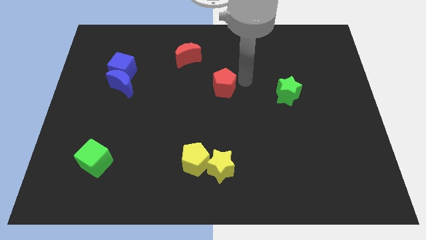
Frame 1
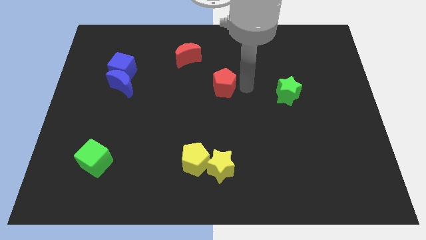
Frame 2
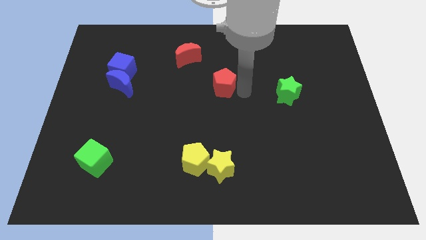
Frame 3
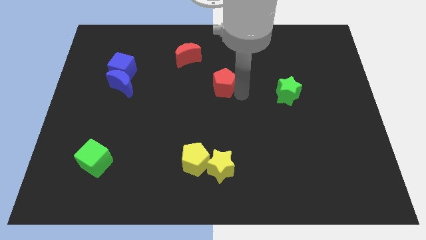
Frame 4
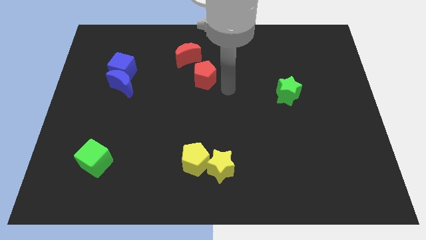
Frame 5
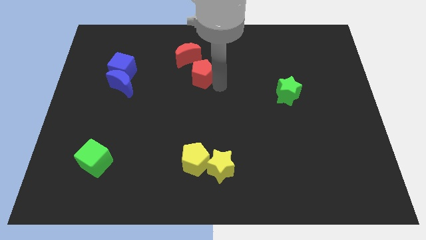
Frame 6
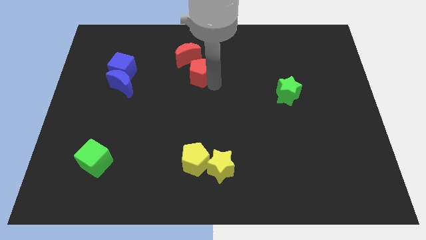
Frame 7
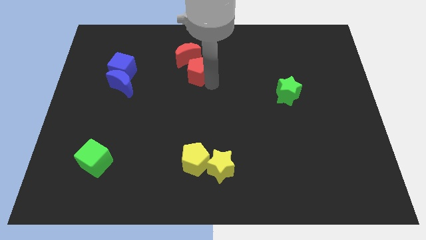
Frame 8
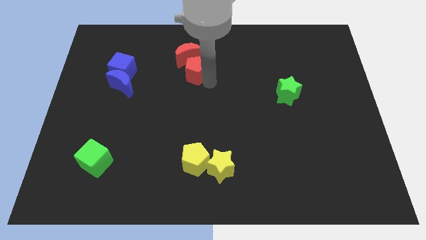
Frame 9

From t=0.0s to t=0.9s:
put the red pentagon into the red crescent

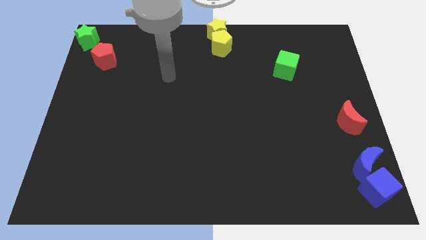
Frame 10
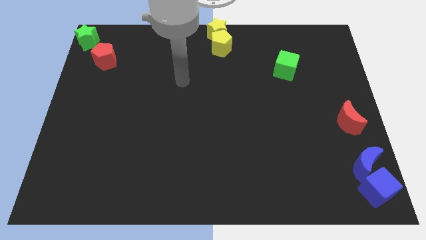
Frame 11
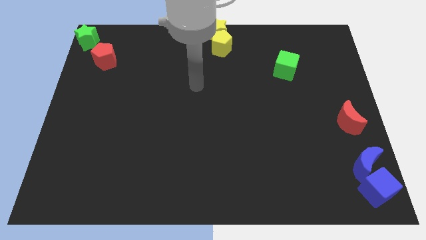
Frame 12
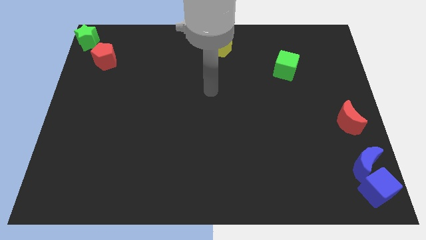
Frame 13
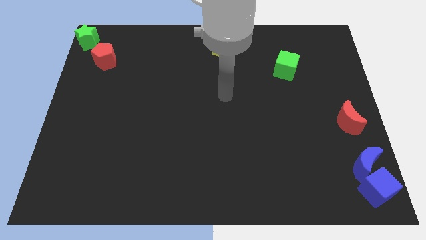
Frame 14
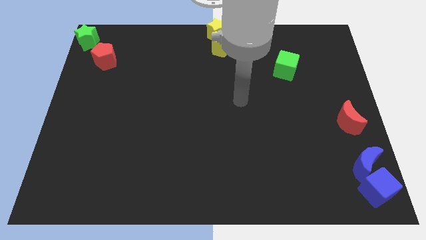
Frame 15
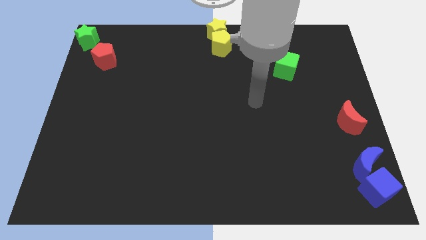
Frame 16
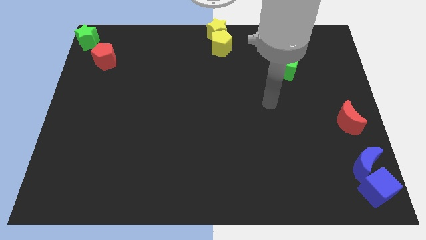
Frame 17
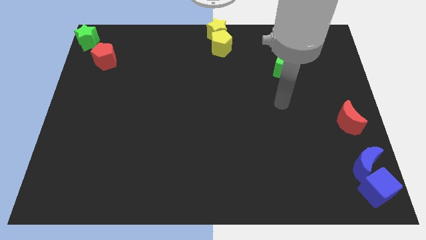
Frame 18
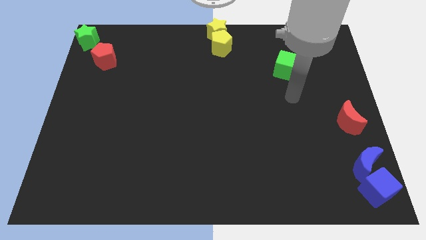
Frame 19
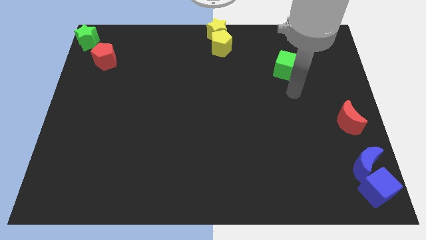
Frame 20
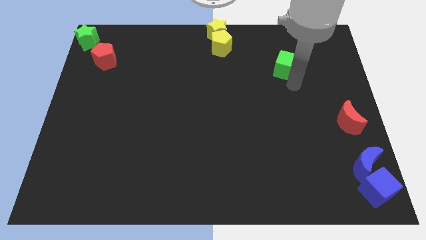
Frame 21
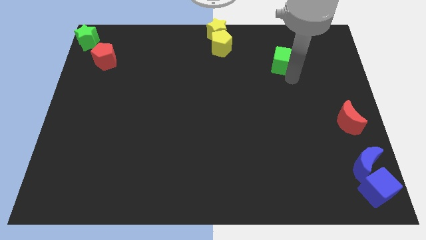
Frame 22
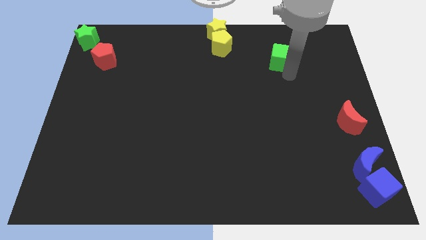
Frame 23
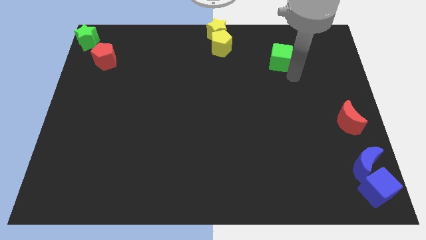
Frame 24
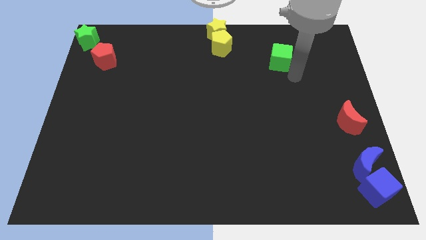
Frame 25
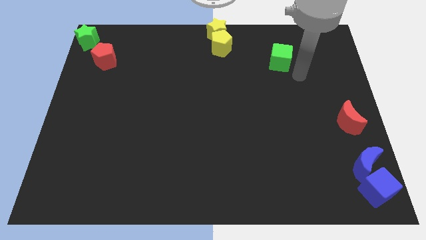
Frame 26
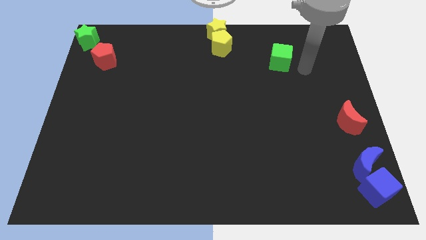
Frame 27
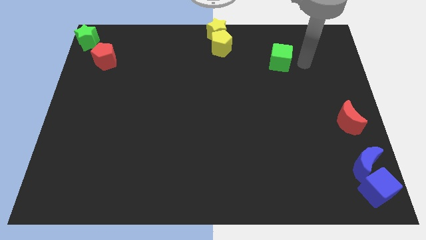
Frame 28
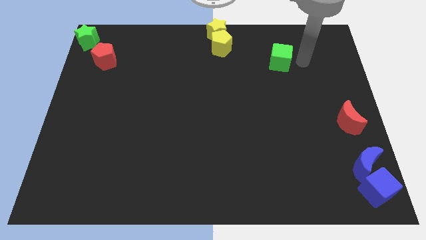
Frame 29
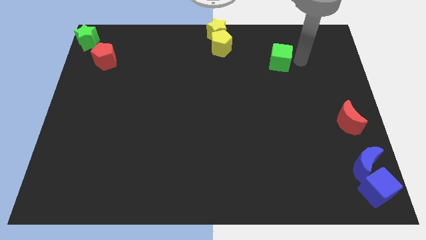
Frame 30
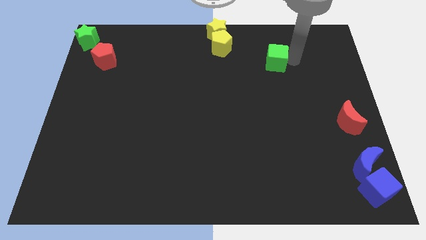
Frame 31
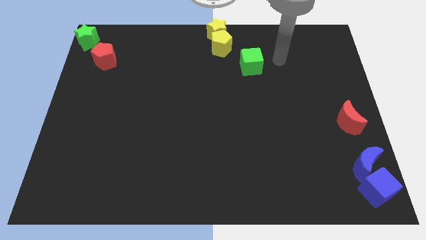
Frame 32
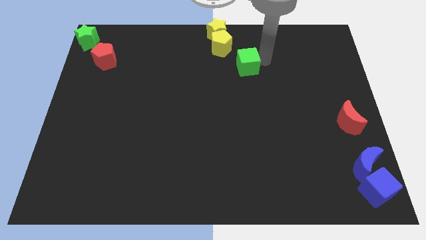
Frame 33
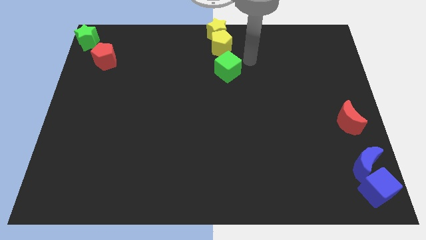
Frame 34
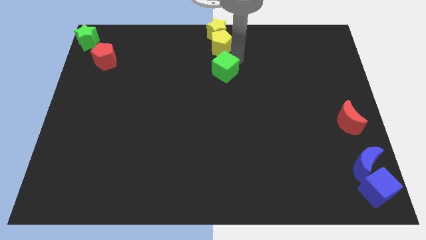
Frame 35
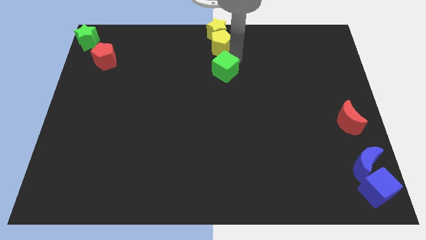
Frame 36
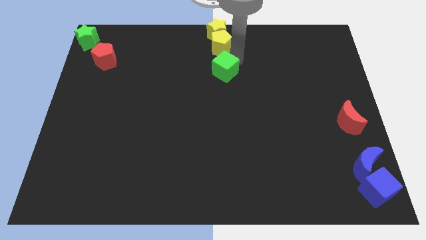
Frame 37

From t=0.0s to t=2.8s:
push green cube below yellow pentagon

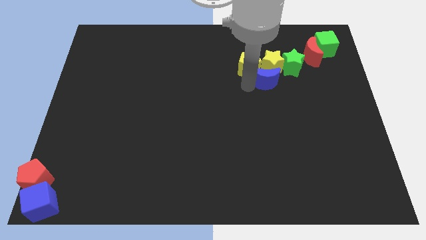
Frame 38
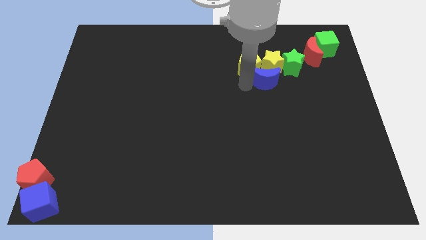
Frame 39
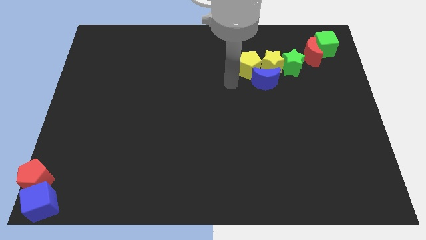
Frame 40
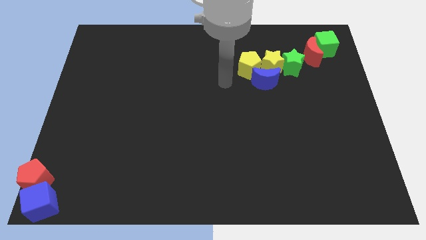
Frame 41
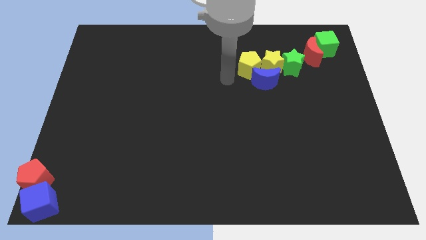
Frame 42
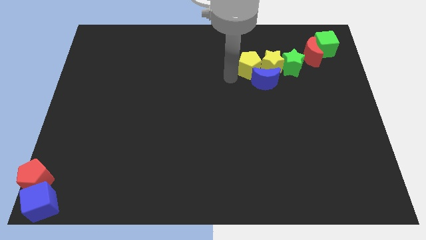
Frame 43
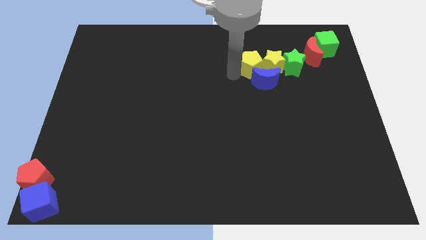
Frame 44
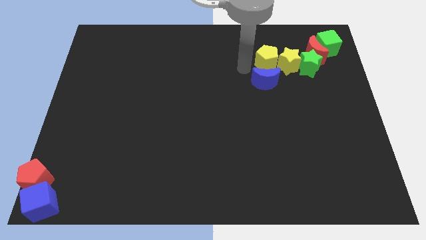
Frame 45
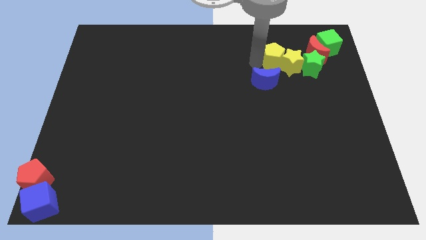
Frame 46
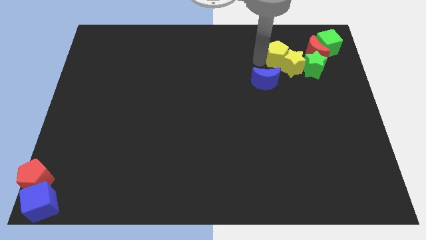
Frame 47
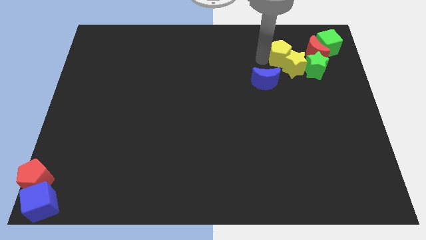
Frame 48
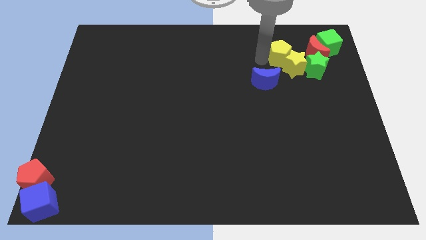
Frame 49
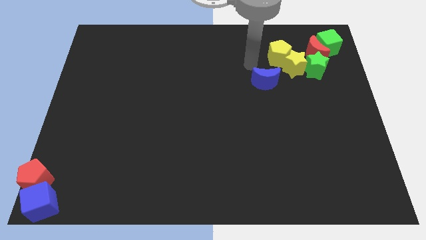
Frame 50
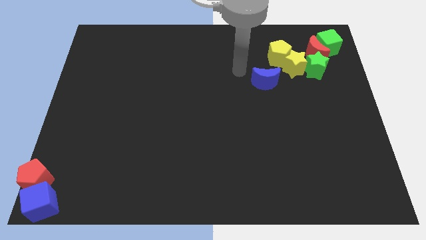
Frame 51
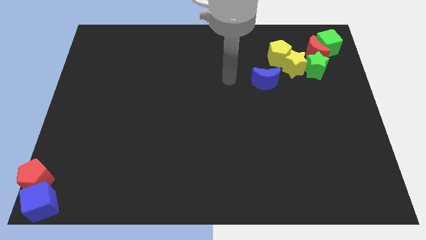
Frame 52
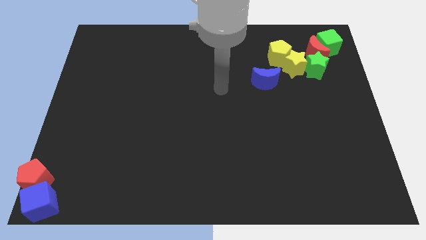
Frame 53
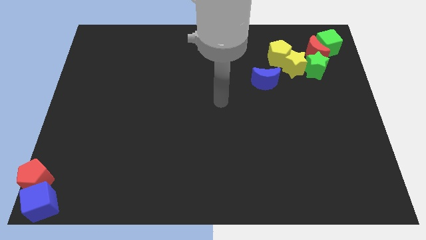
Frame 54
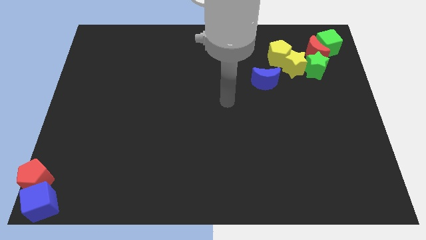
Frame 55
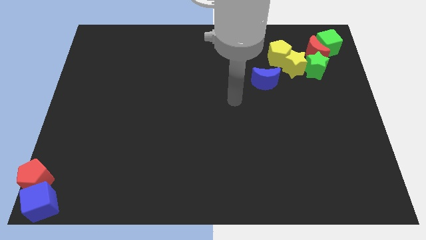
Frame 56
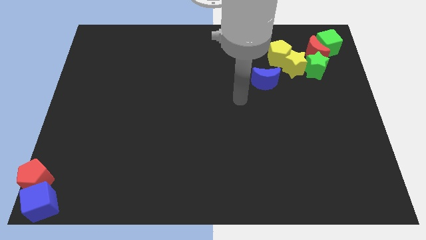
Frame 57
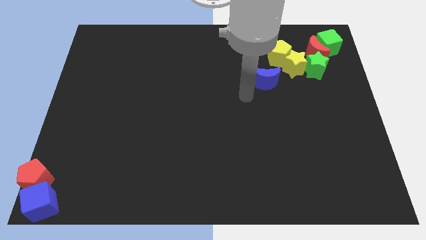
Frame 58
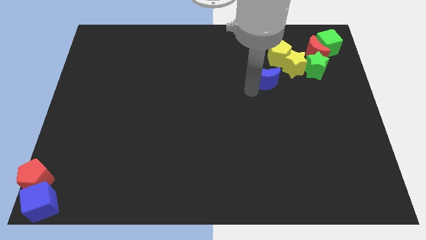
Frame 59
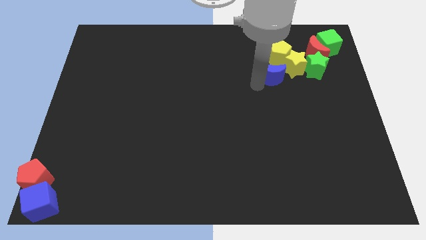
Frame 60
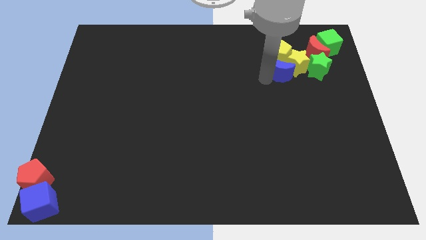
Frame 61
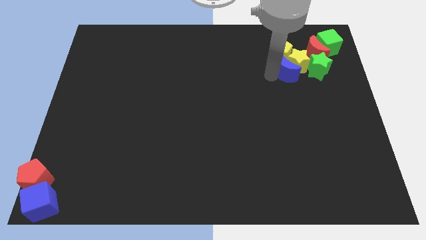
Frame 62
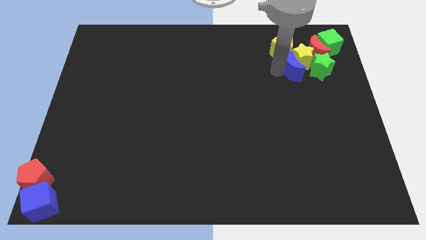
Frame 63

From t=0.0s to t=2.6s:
push the yellow pentagon and the blue crescent into the yellow star

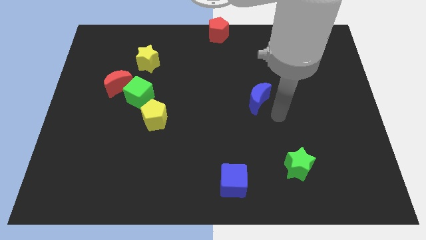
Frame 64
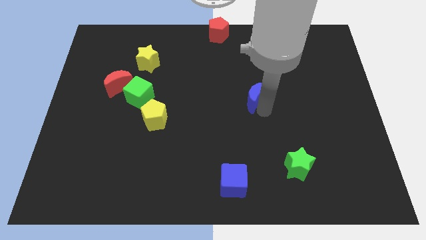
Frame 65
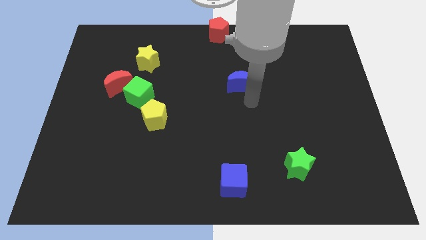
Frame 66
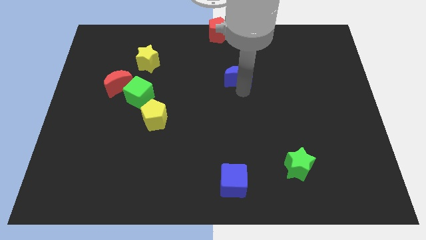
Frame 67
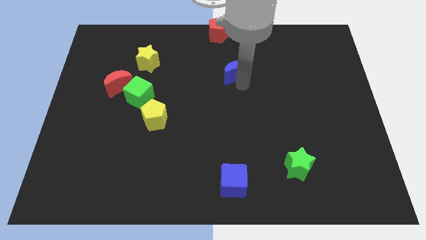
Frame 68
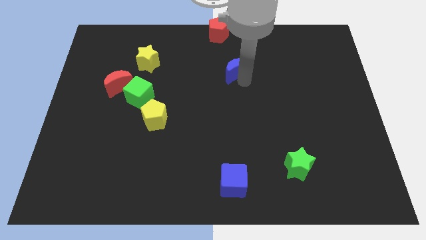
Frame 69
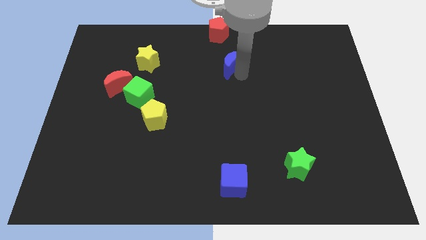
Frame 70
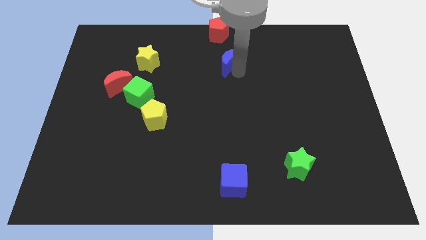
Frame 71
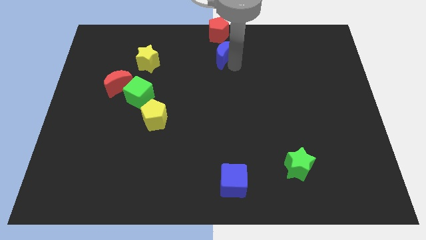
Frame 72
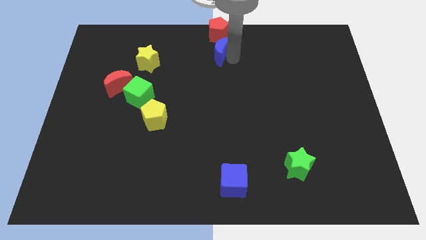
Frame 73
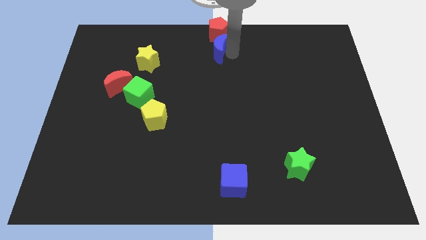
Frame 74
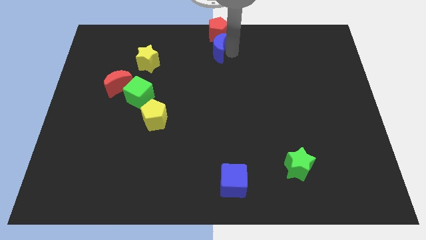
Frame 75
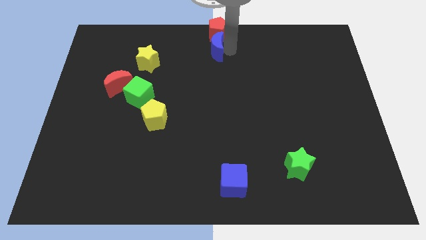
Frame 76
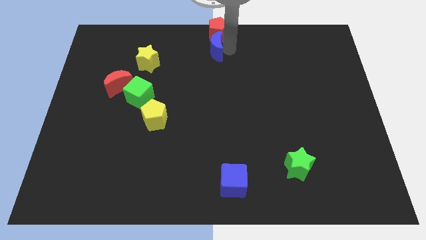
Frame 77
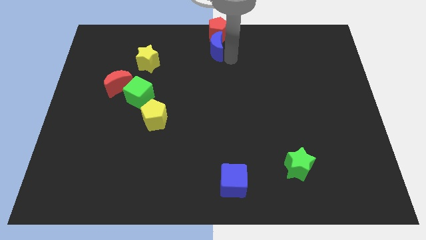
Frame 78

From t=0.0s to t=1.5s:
place the blue moon down to the red pentagon

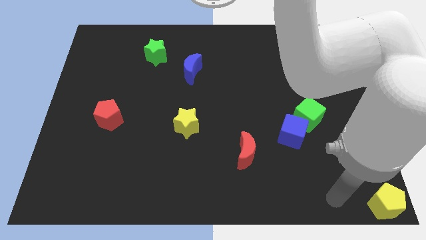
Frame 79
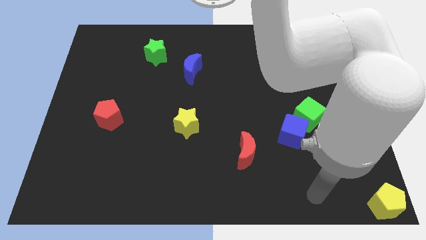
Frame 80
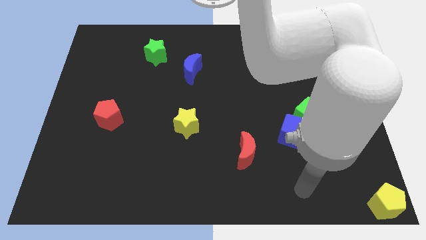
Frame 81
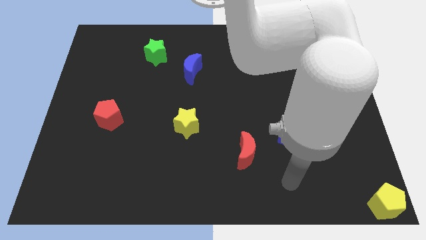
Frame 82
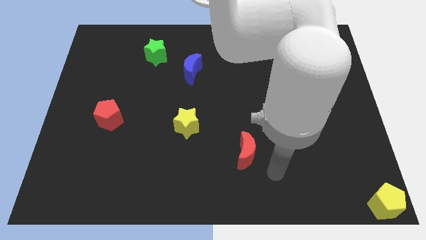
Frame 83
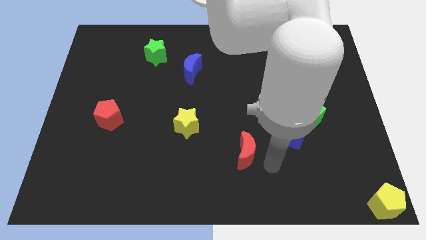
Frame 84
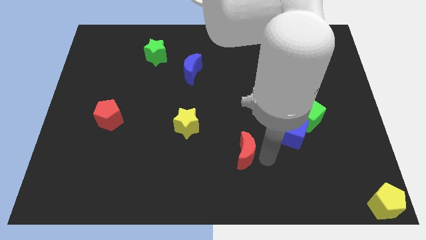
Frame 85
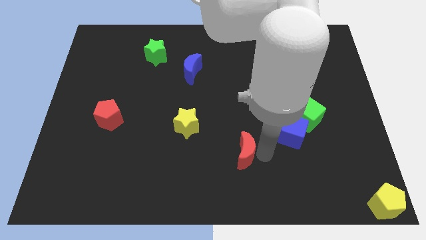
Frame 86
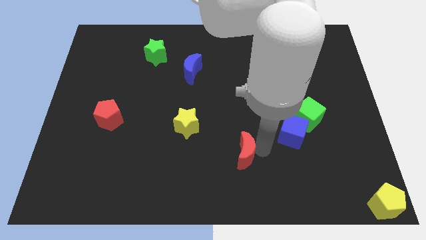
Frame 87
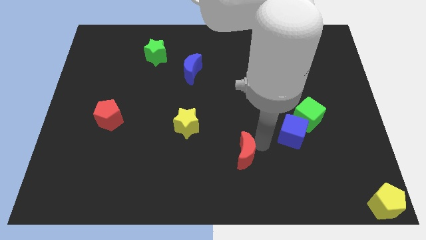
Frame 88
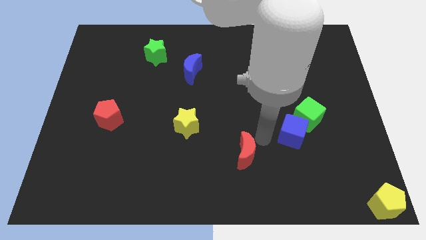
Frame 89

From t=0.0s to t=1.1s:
move your arm away from the yellow pentagon
